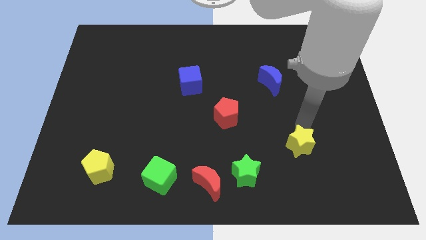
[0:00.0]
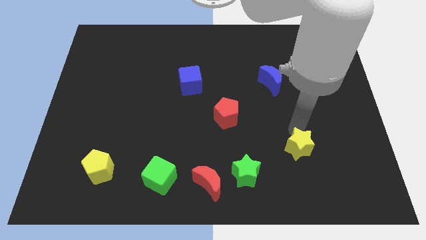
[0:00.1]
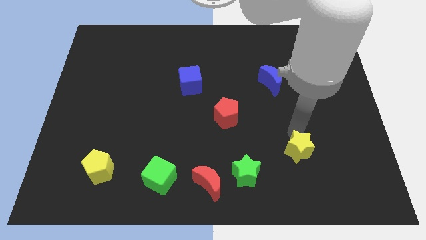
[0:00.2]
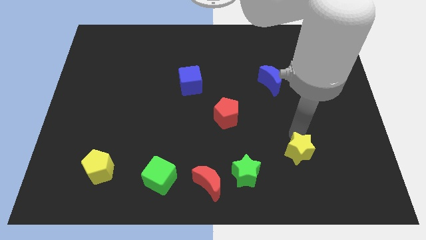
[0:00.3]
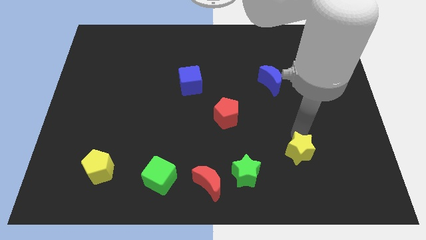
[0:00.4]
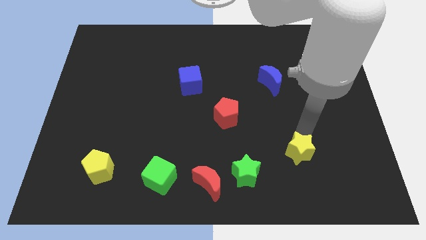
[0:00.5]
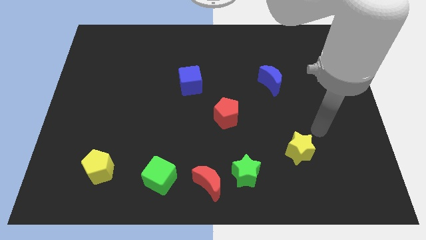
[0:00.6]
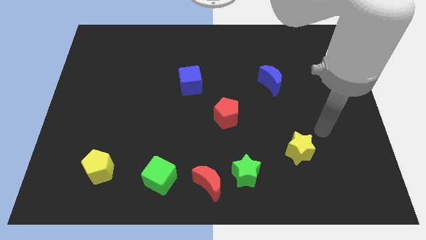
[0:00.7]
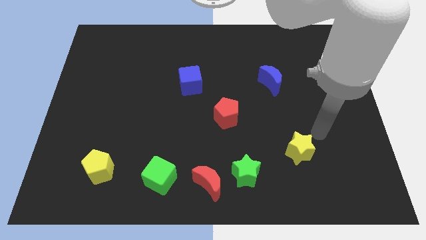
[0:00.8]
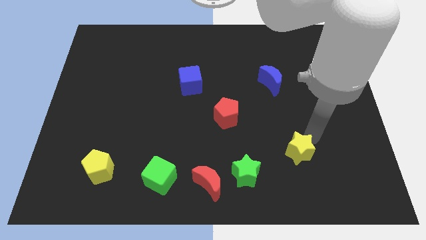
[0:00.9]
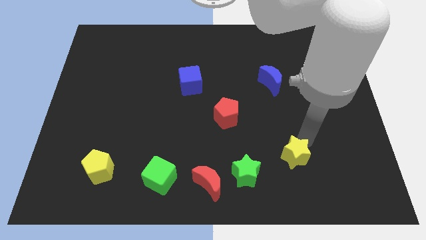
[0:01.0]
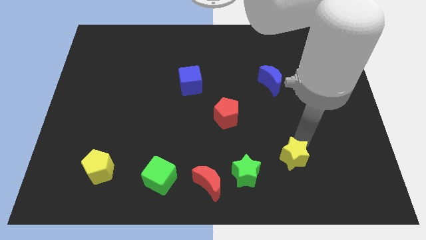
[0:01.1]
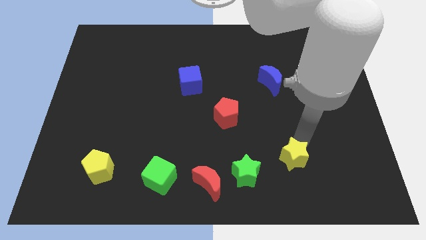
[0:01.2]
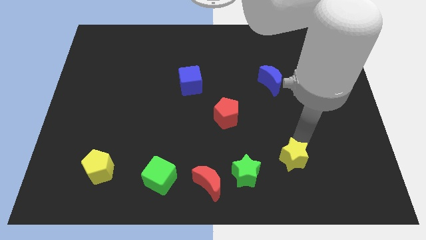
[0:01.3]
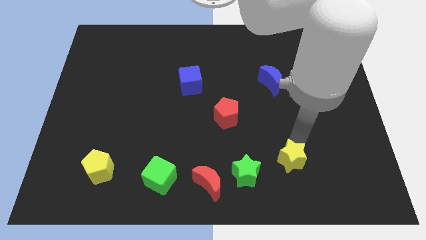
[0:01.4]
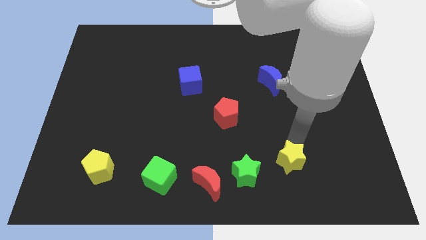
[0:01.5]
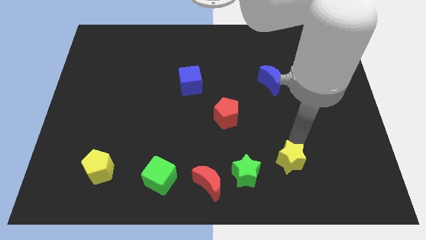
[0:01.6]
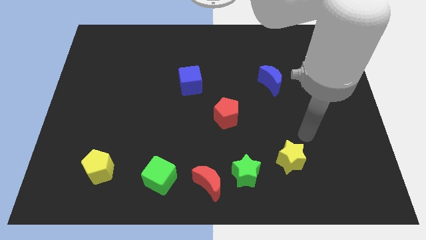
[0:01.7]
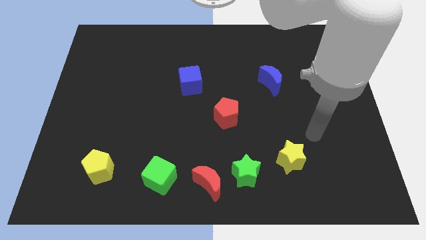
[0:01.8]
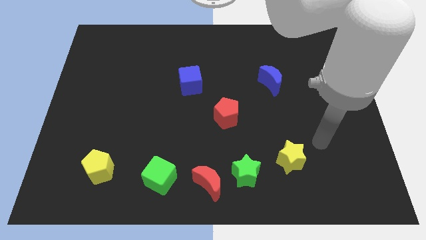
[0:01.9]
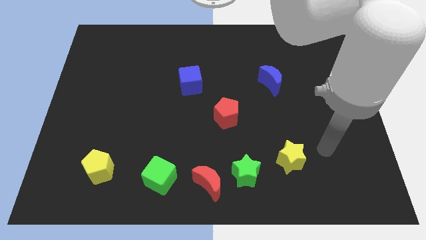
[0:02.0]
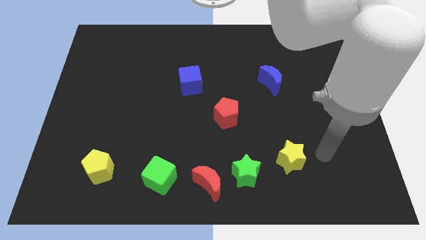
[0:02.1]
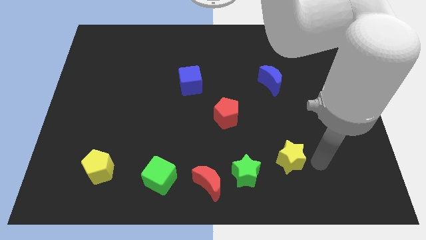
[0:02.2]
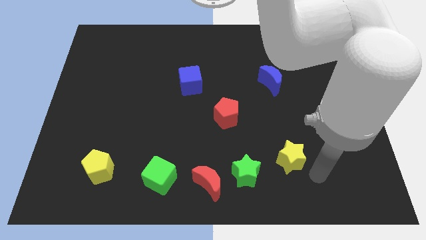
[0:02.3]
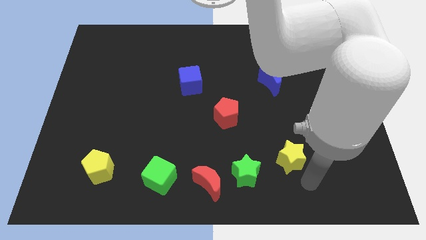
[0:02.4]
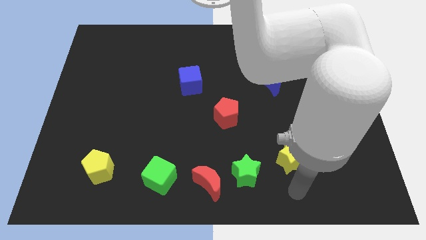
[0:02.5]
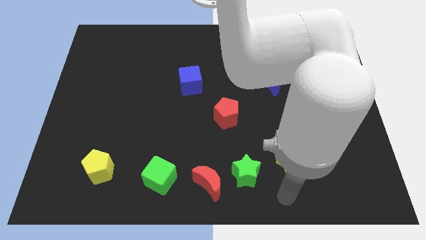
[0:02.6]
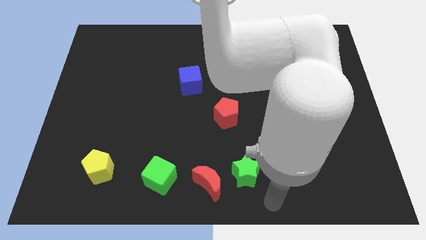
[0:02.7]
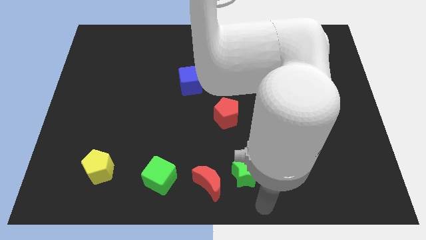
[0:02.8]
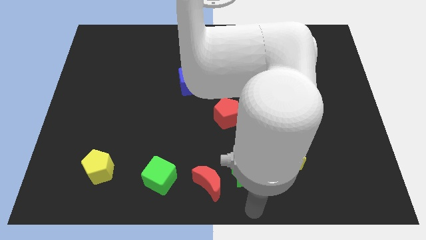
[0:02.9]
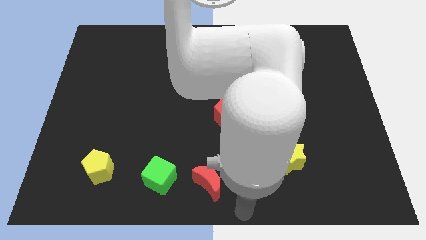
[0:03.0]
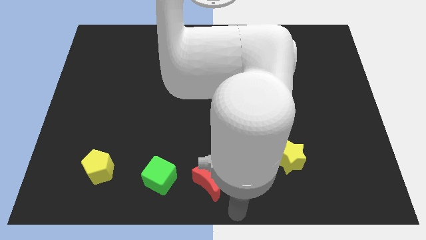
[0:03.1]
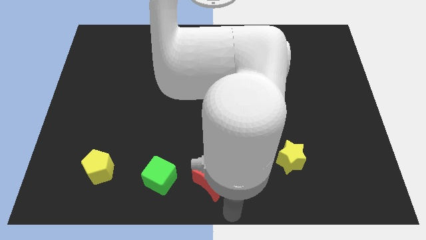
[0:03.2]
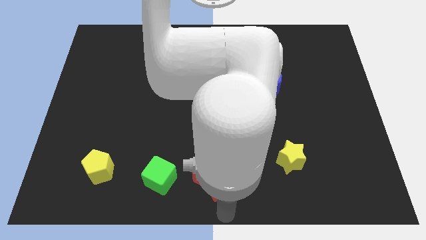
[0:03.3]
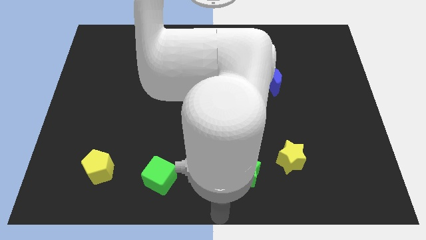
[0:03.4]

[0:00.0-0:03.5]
move the yellow star towards the right of green star

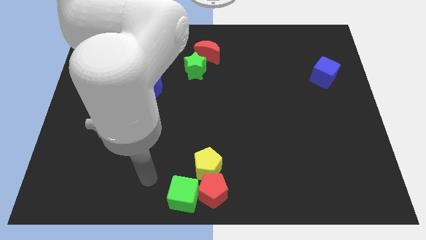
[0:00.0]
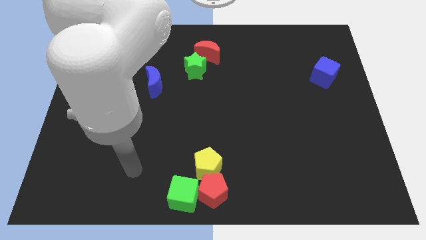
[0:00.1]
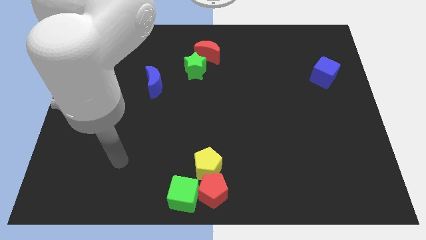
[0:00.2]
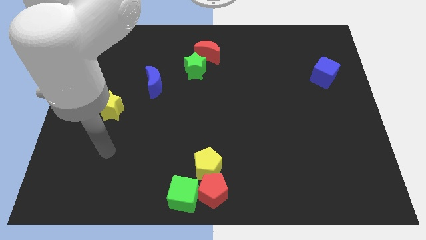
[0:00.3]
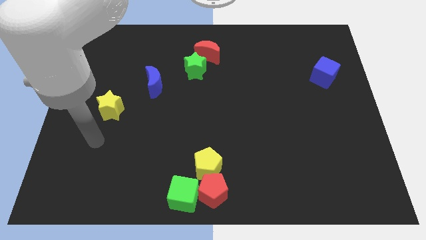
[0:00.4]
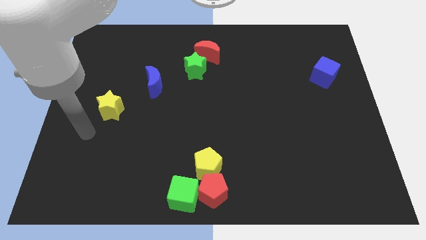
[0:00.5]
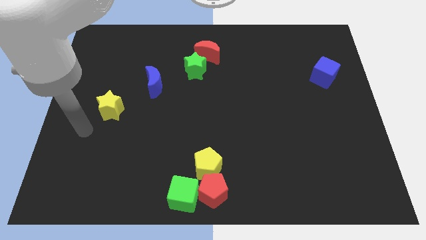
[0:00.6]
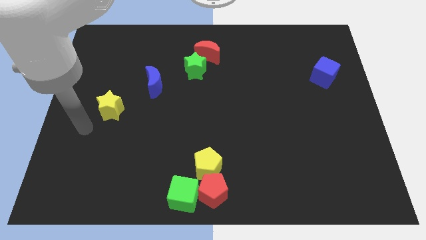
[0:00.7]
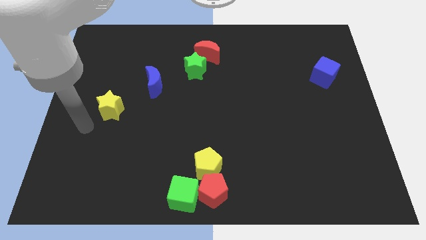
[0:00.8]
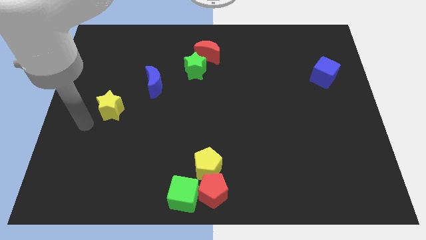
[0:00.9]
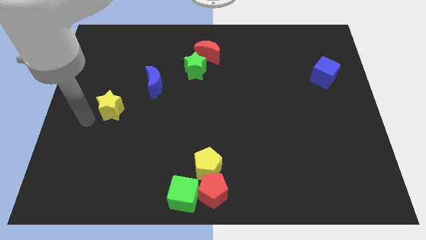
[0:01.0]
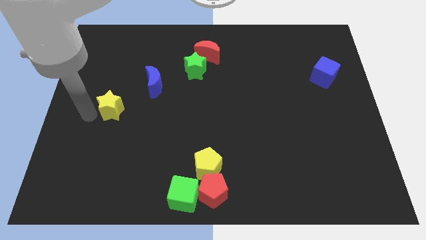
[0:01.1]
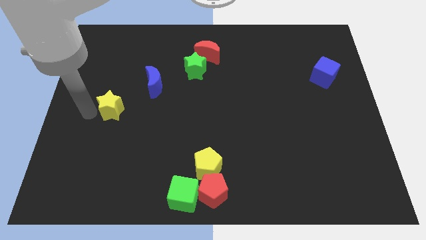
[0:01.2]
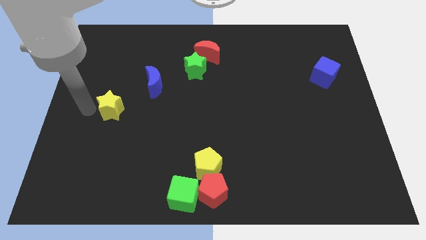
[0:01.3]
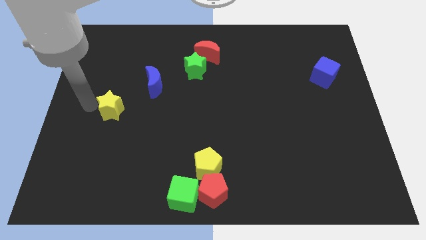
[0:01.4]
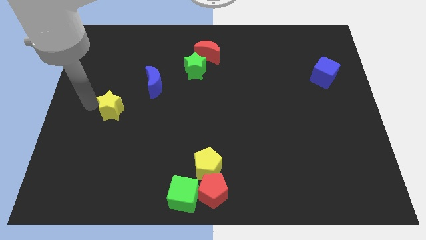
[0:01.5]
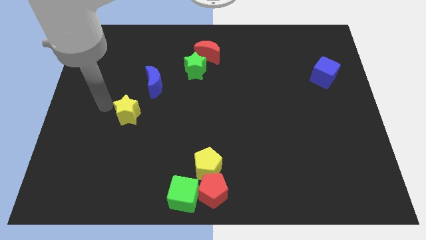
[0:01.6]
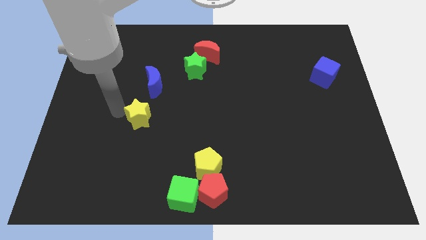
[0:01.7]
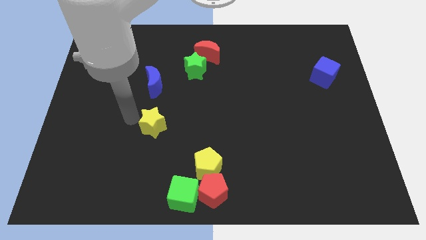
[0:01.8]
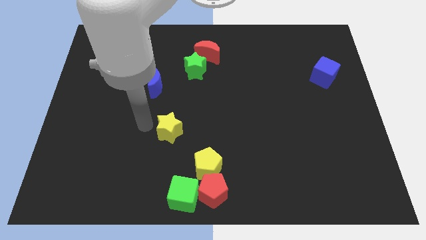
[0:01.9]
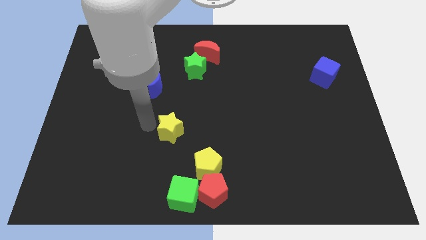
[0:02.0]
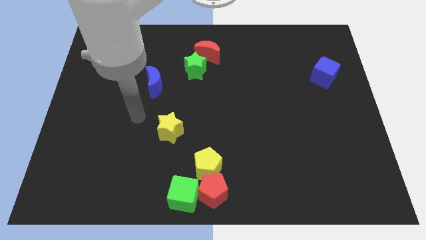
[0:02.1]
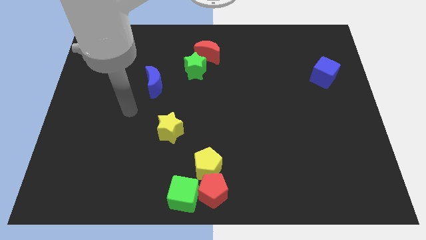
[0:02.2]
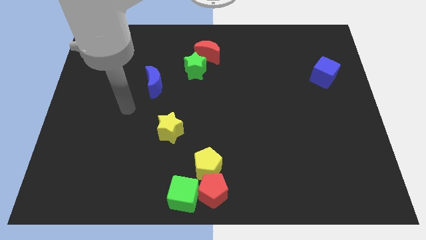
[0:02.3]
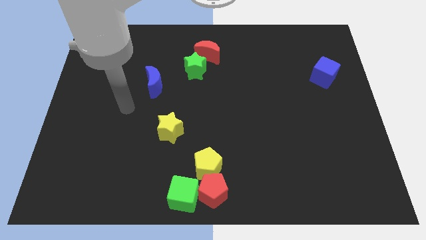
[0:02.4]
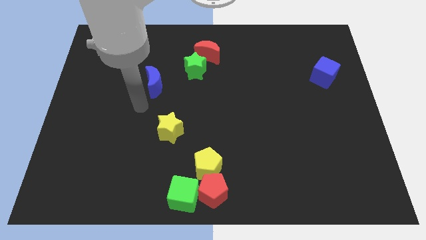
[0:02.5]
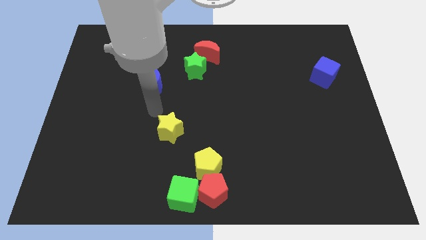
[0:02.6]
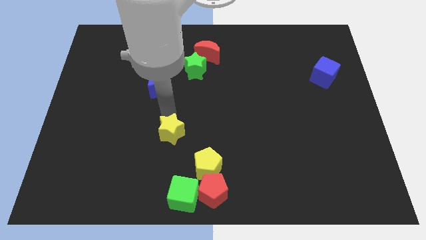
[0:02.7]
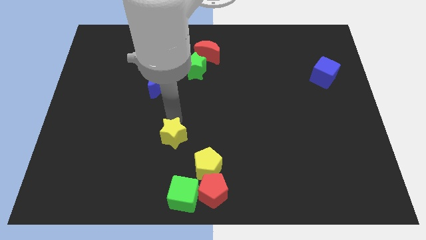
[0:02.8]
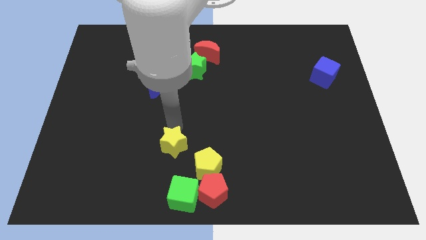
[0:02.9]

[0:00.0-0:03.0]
place the yellow star above the green cube

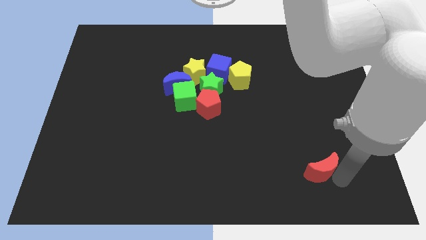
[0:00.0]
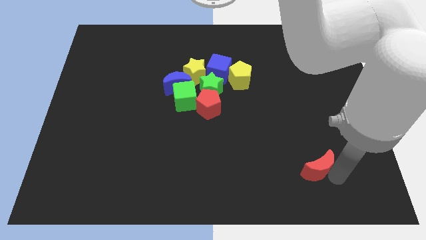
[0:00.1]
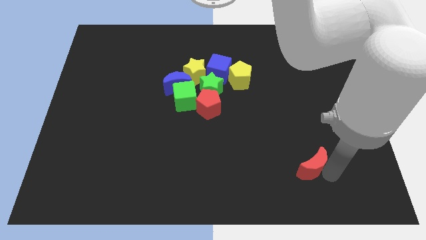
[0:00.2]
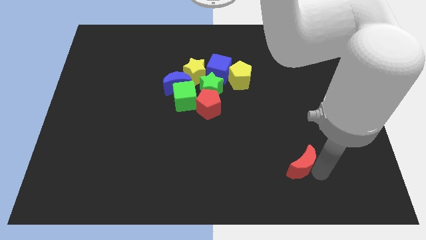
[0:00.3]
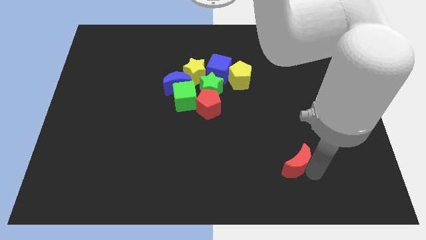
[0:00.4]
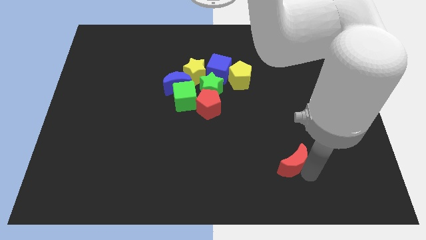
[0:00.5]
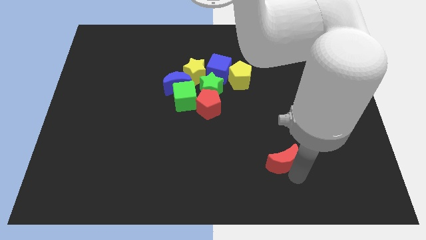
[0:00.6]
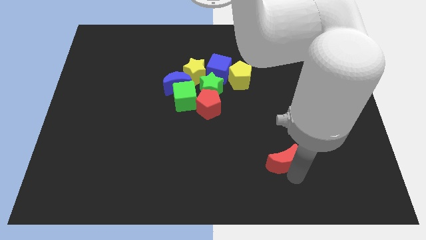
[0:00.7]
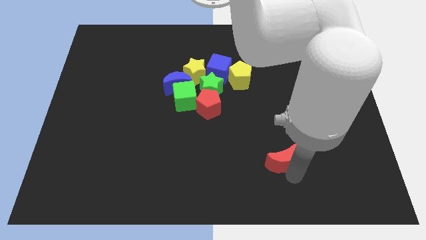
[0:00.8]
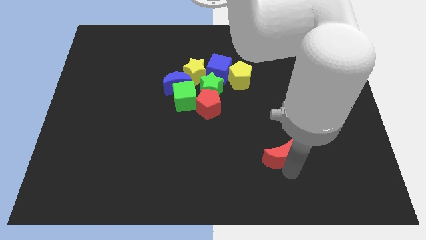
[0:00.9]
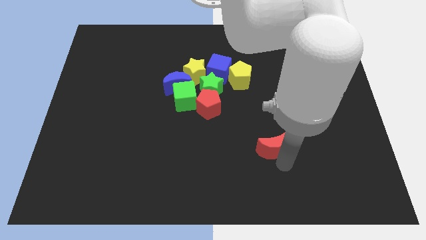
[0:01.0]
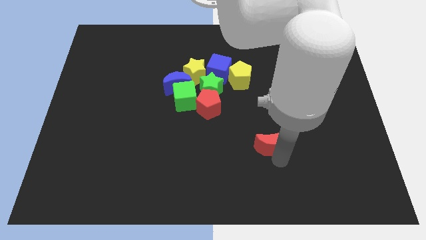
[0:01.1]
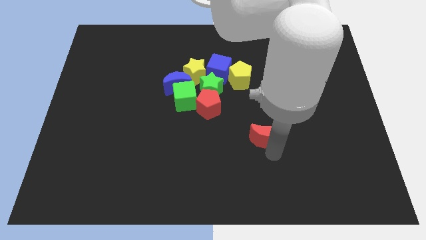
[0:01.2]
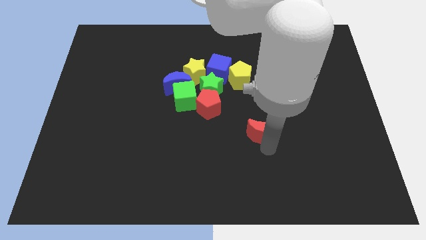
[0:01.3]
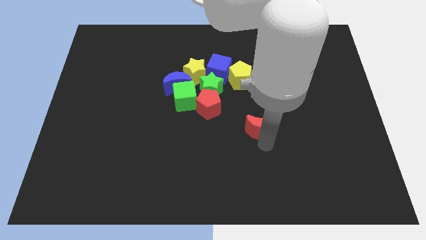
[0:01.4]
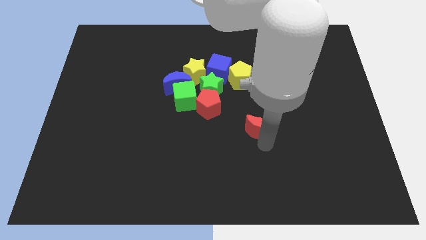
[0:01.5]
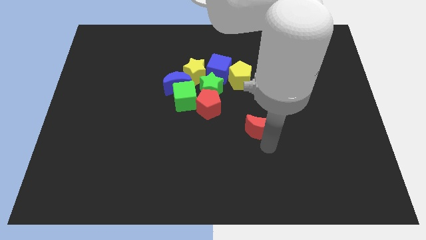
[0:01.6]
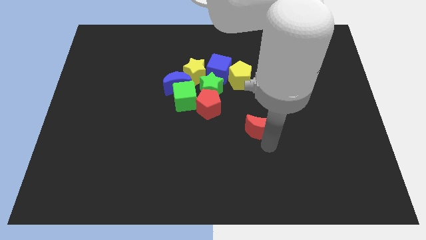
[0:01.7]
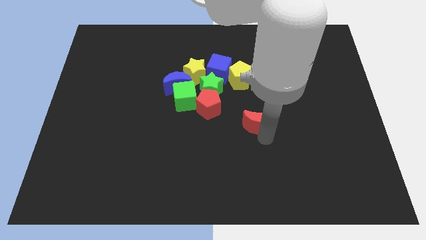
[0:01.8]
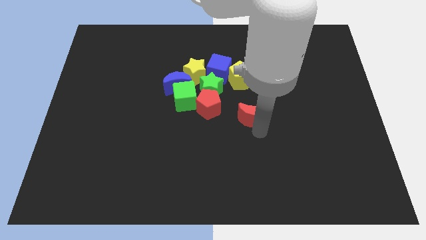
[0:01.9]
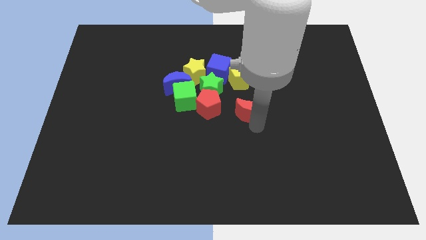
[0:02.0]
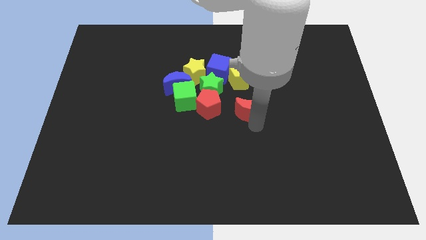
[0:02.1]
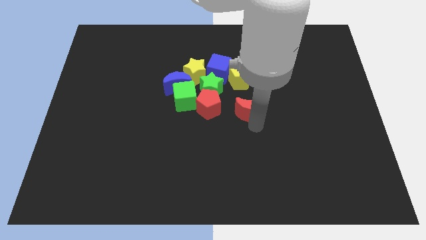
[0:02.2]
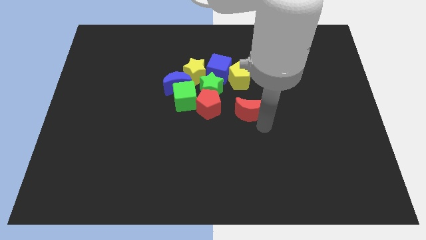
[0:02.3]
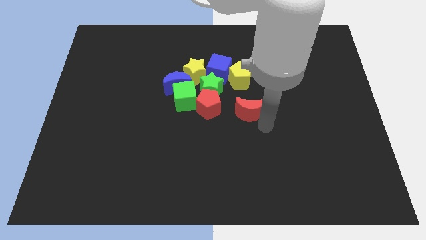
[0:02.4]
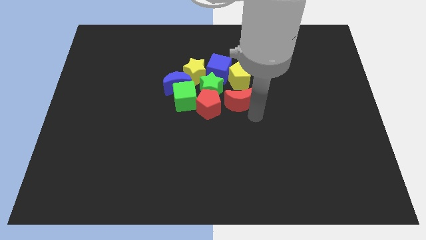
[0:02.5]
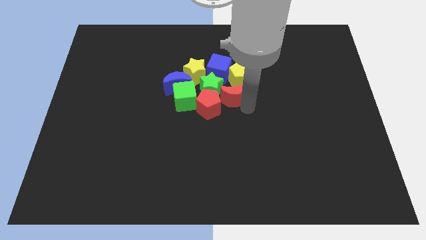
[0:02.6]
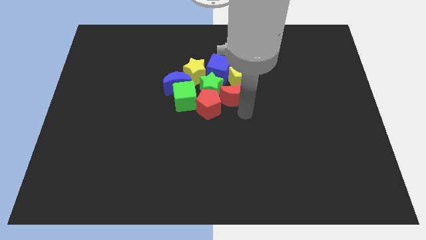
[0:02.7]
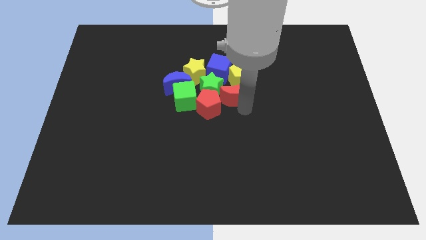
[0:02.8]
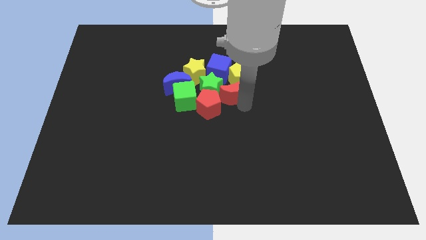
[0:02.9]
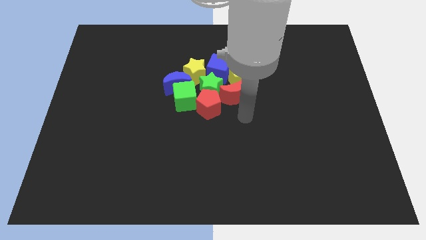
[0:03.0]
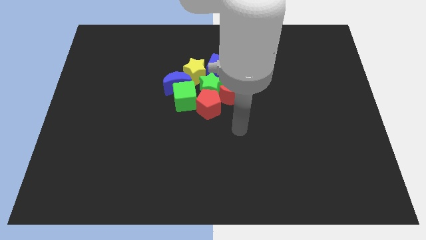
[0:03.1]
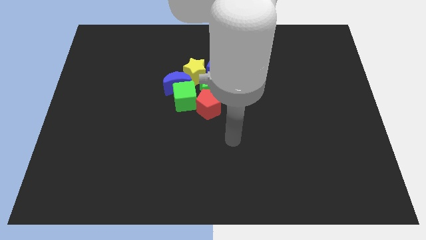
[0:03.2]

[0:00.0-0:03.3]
drag the red crescent into the group of blocks
